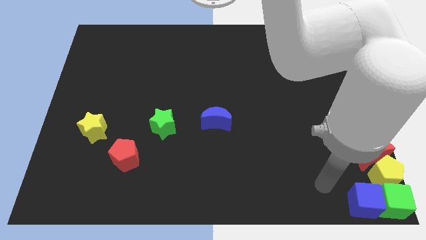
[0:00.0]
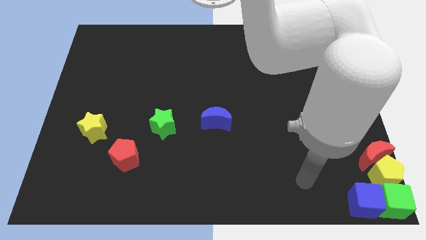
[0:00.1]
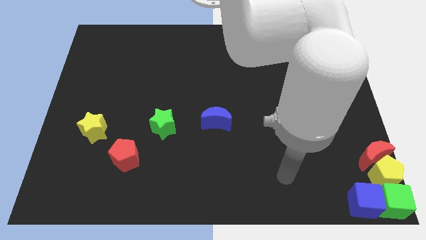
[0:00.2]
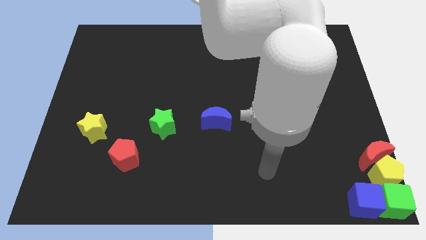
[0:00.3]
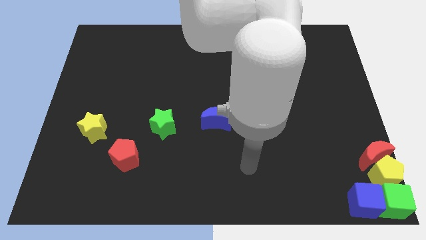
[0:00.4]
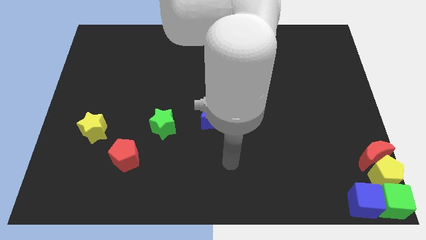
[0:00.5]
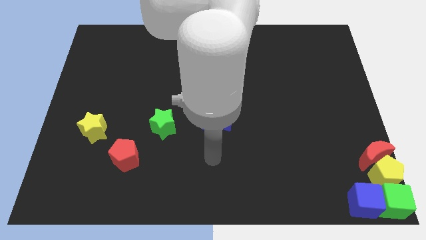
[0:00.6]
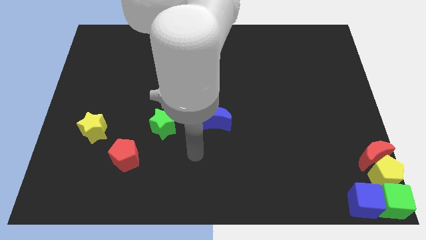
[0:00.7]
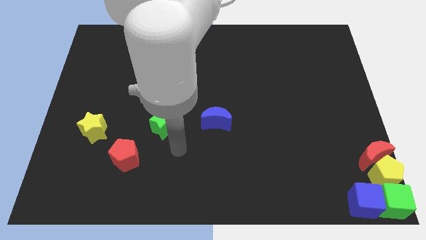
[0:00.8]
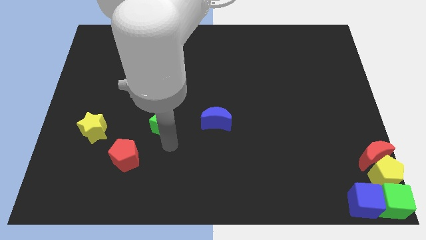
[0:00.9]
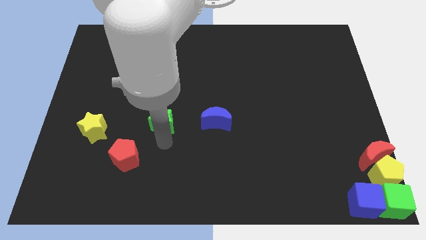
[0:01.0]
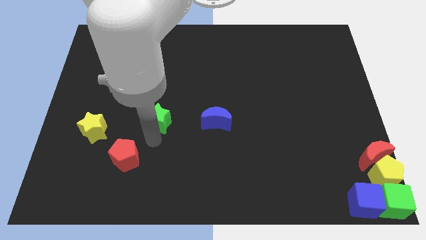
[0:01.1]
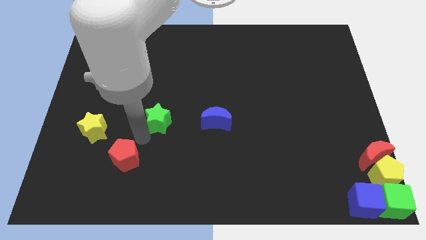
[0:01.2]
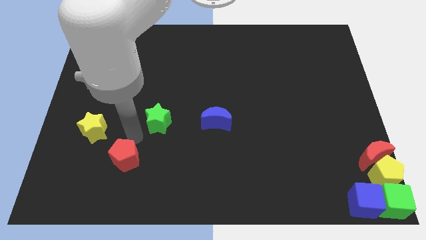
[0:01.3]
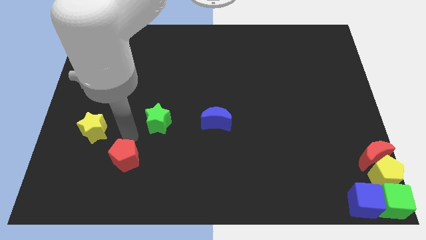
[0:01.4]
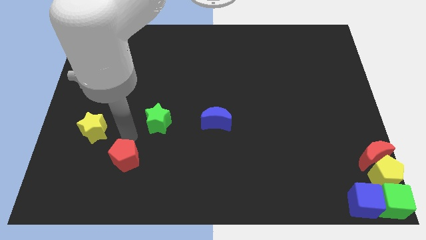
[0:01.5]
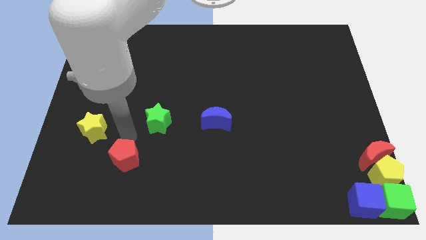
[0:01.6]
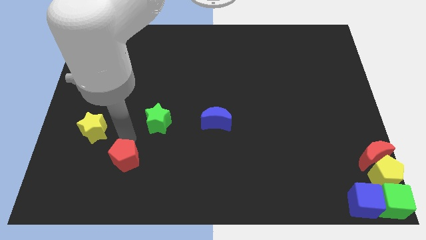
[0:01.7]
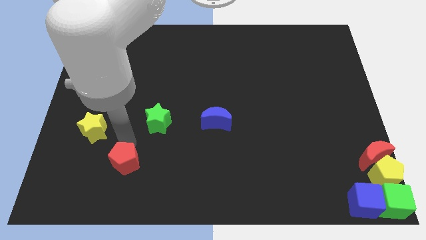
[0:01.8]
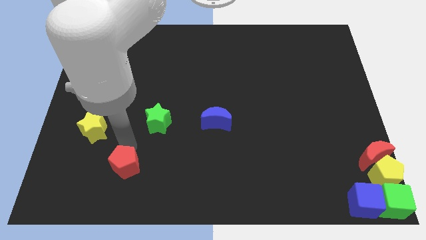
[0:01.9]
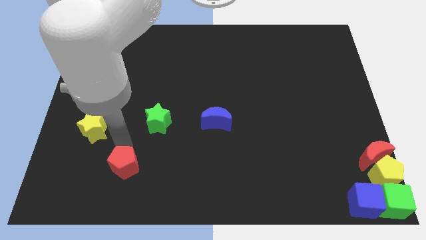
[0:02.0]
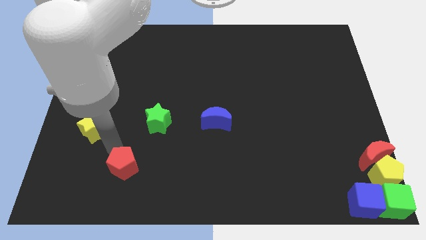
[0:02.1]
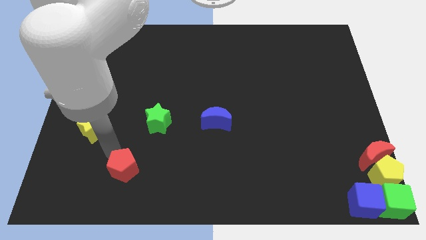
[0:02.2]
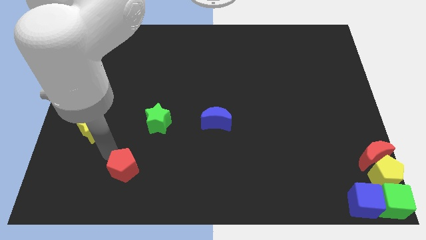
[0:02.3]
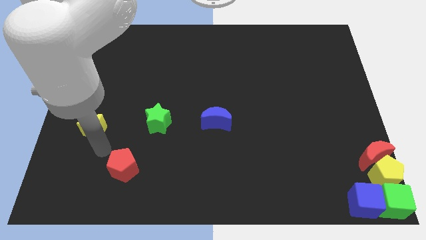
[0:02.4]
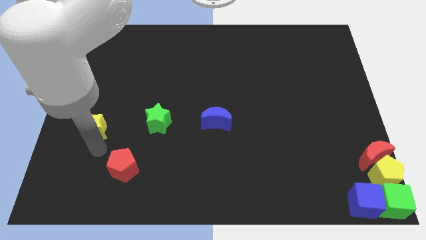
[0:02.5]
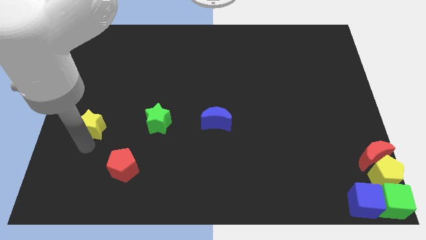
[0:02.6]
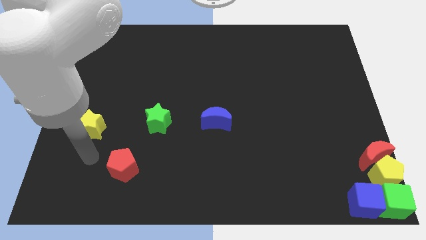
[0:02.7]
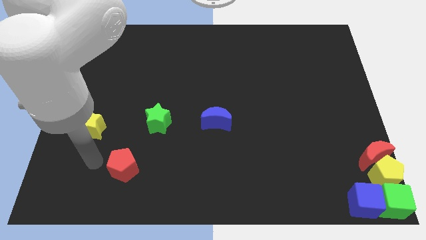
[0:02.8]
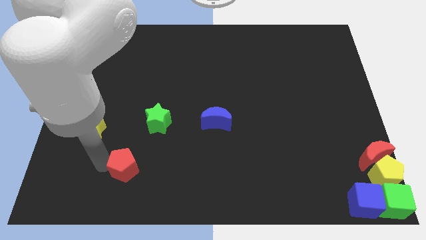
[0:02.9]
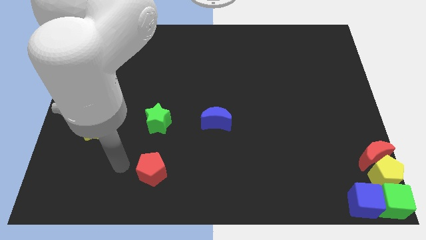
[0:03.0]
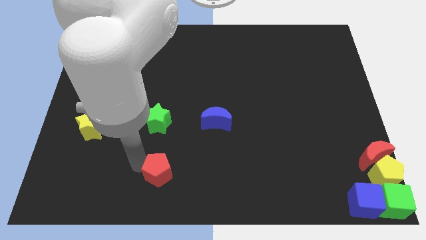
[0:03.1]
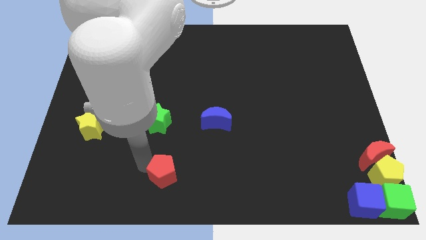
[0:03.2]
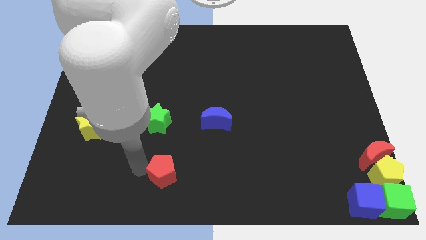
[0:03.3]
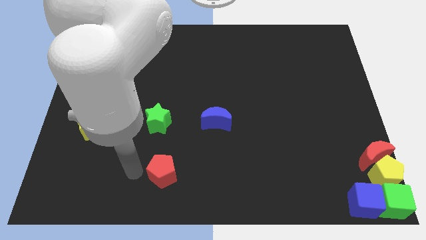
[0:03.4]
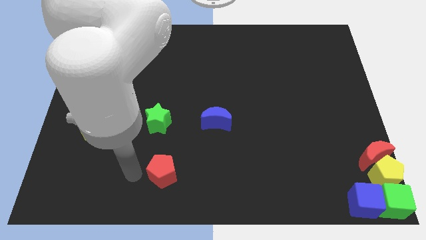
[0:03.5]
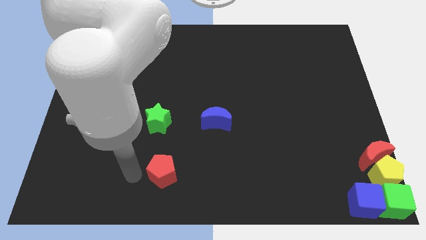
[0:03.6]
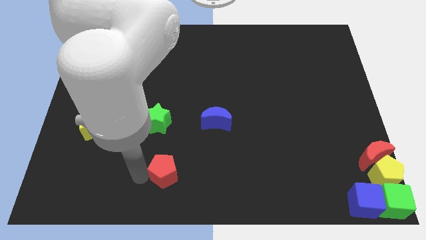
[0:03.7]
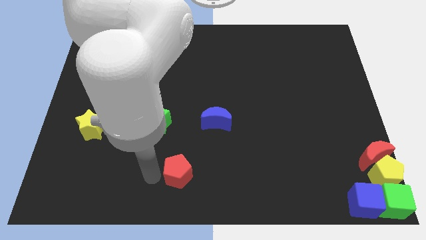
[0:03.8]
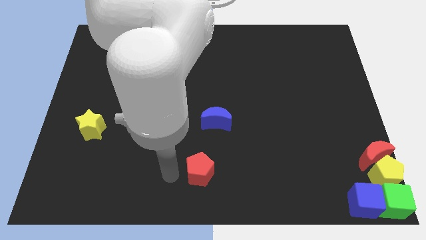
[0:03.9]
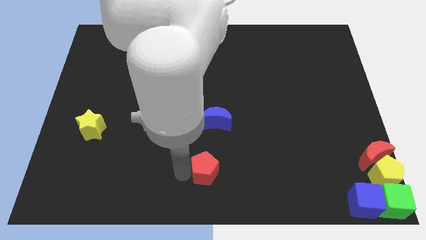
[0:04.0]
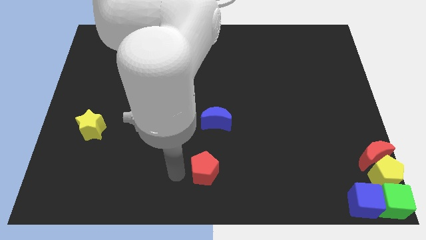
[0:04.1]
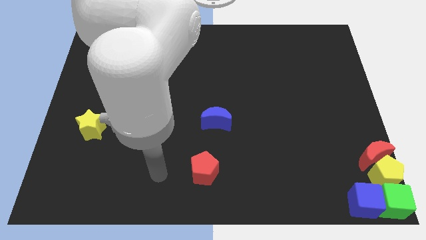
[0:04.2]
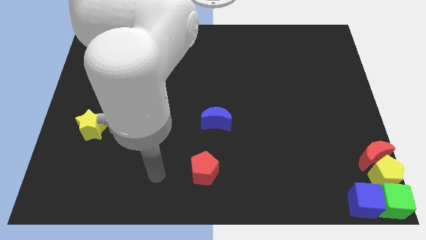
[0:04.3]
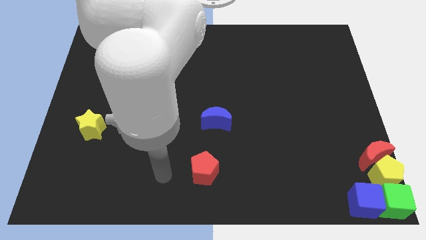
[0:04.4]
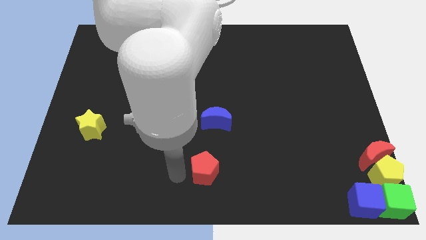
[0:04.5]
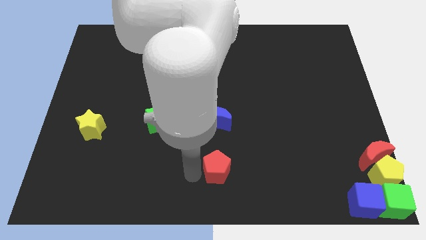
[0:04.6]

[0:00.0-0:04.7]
place the red pentagon vertical to the blue moon

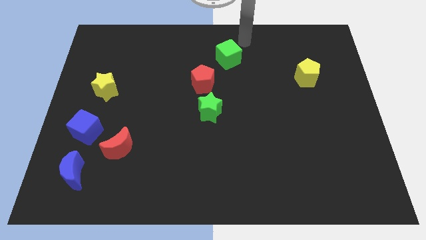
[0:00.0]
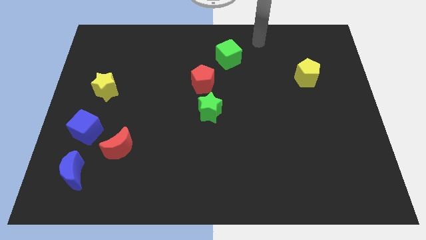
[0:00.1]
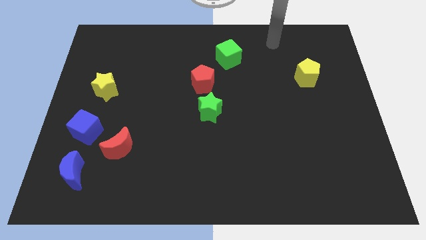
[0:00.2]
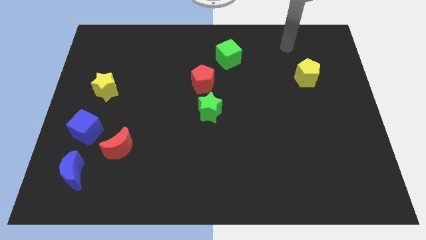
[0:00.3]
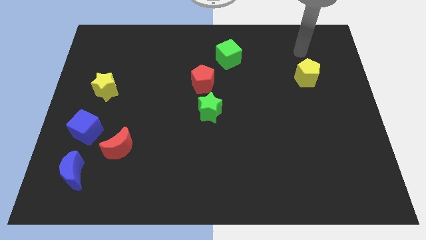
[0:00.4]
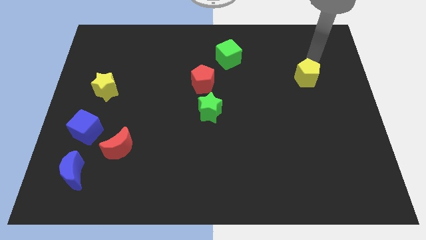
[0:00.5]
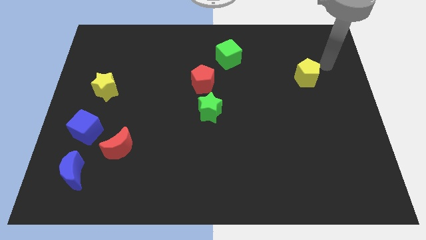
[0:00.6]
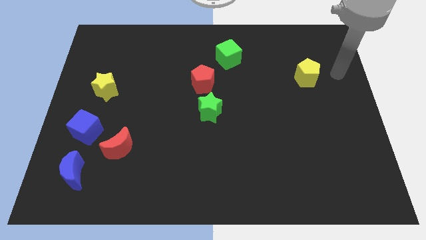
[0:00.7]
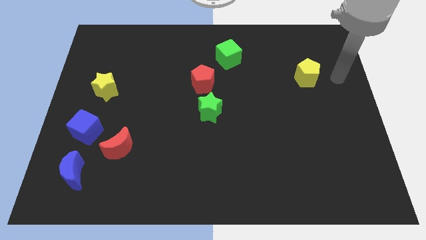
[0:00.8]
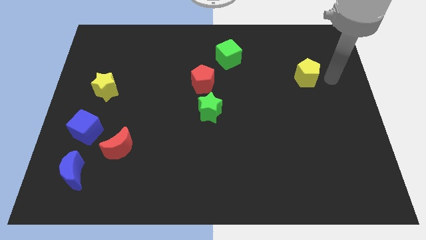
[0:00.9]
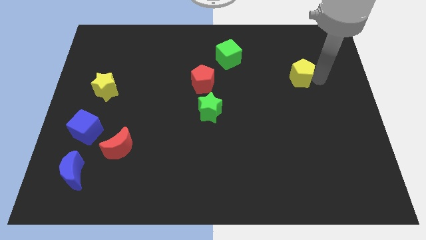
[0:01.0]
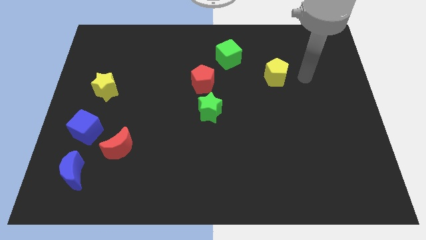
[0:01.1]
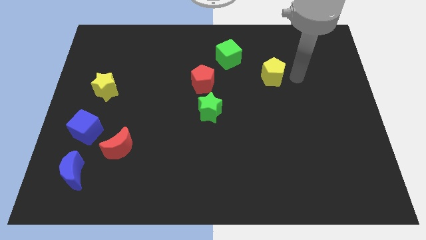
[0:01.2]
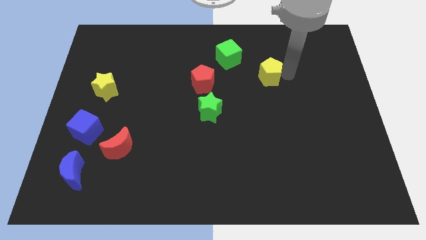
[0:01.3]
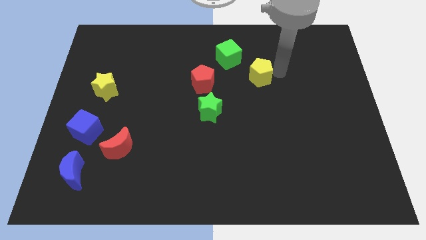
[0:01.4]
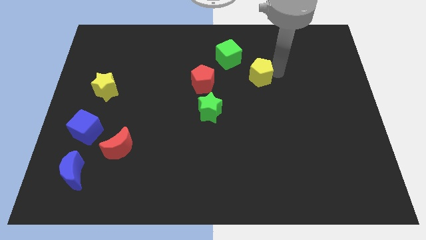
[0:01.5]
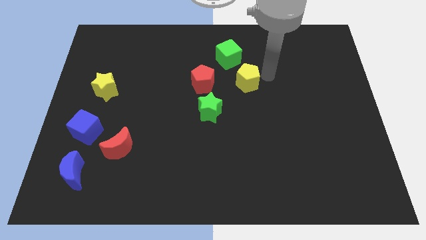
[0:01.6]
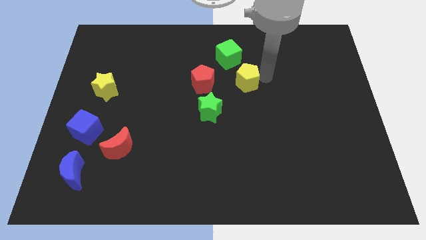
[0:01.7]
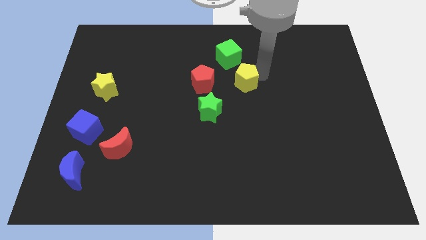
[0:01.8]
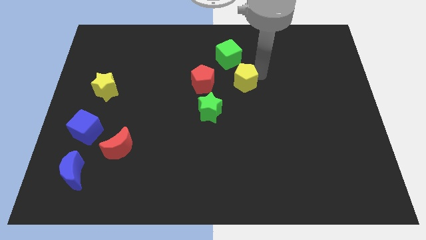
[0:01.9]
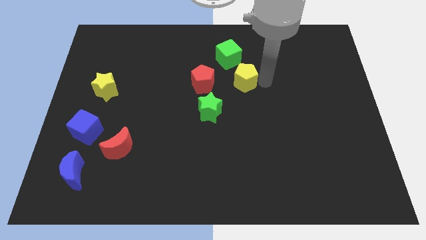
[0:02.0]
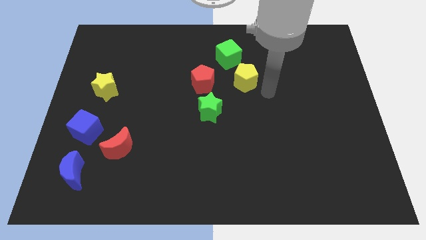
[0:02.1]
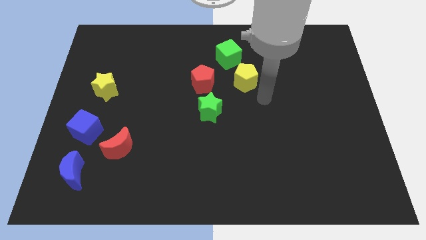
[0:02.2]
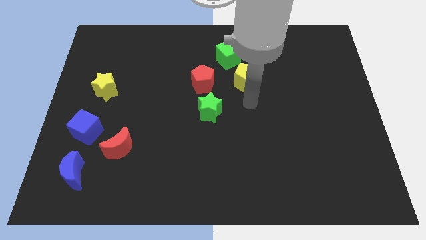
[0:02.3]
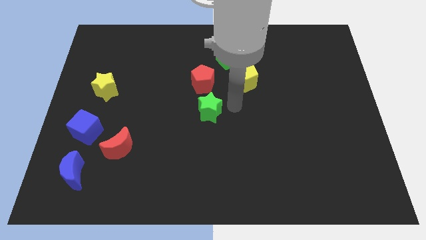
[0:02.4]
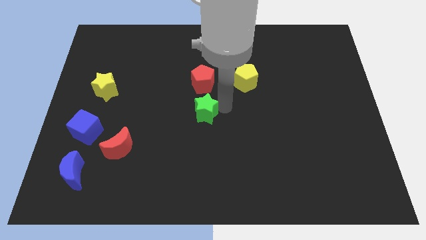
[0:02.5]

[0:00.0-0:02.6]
push the yellow pentagon below the green cube

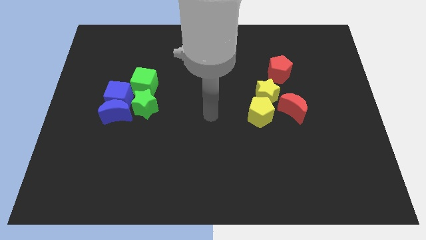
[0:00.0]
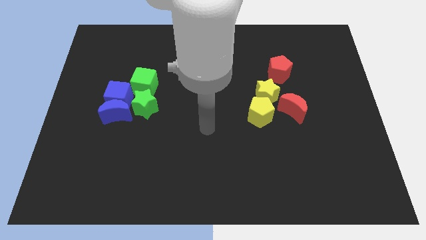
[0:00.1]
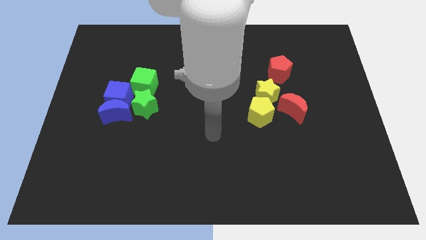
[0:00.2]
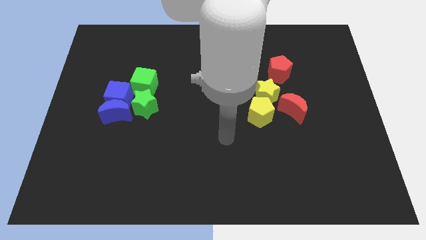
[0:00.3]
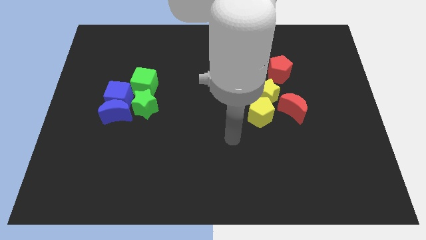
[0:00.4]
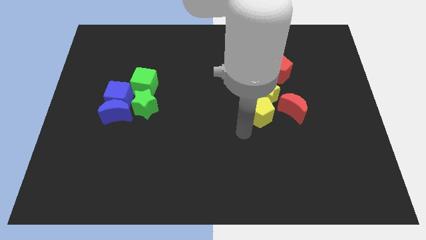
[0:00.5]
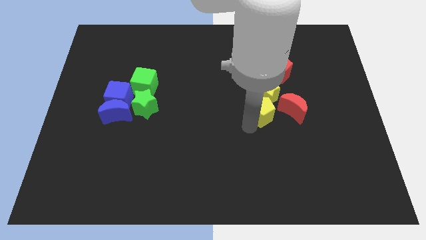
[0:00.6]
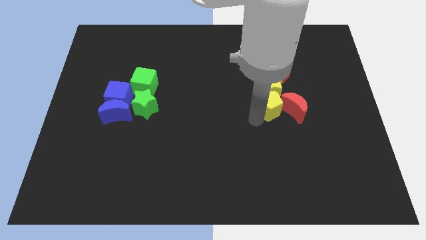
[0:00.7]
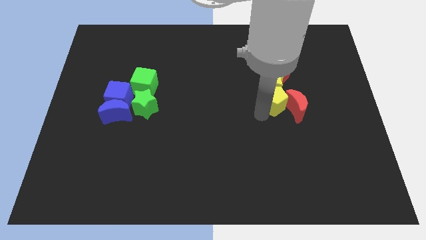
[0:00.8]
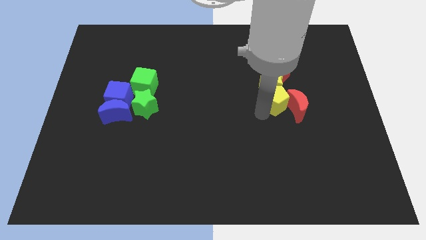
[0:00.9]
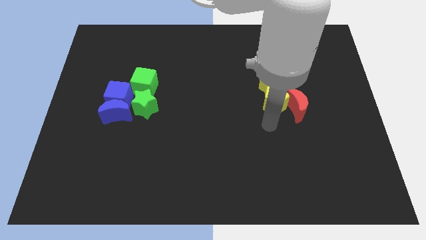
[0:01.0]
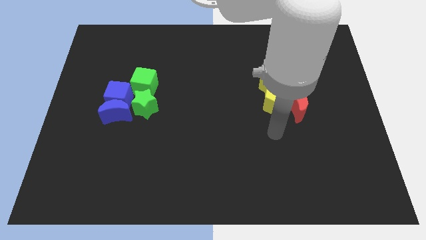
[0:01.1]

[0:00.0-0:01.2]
move the yellow pentagon into the red crescent
